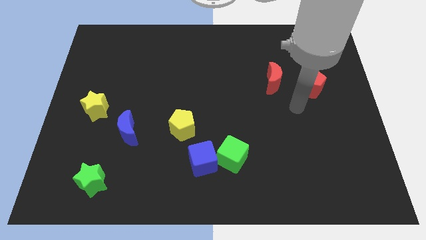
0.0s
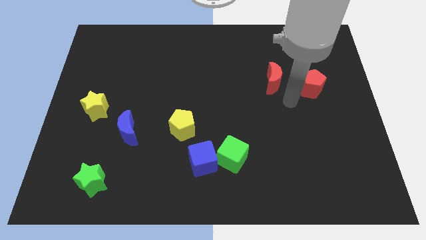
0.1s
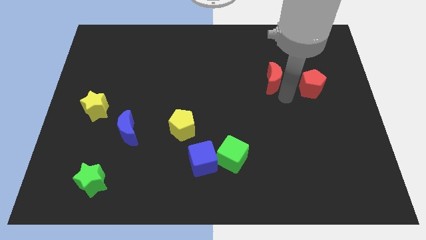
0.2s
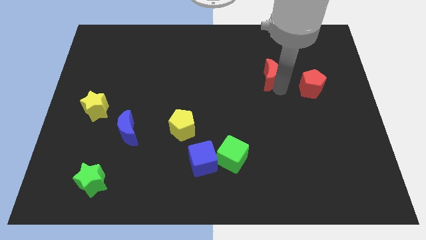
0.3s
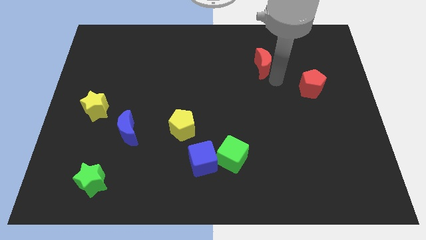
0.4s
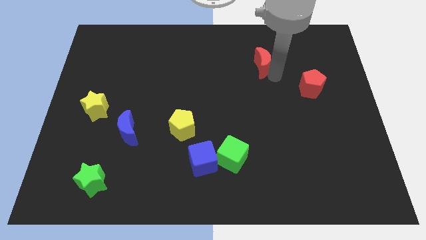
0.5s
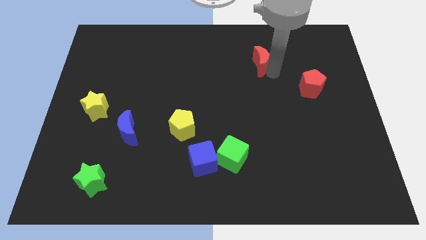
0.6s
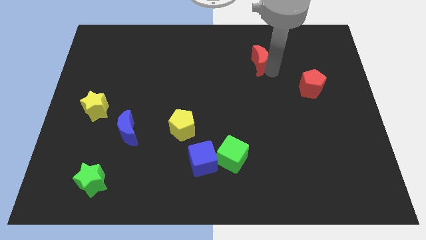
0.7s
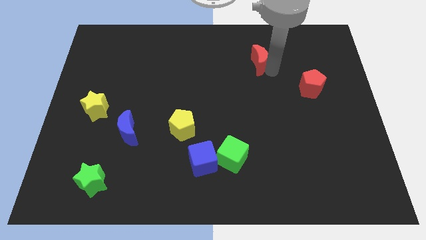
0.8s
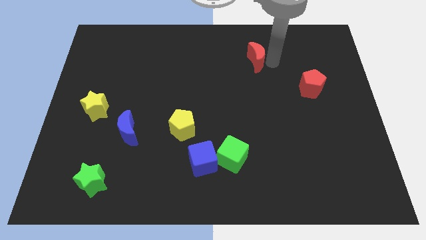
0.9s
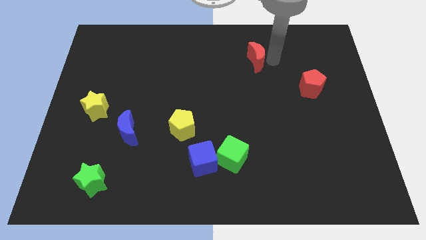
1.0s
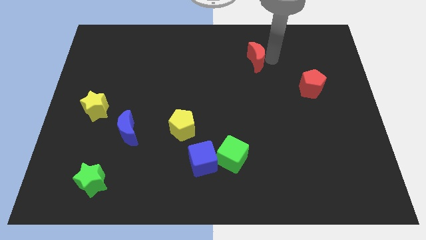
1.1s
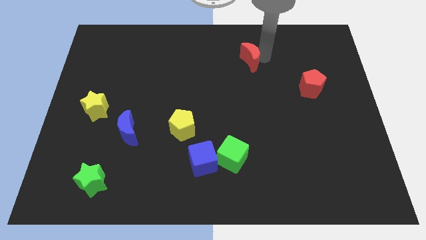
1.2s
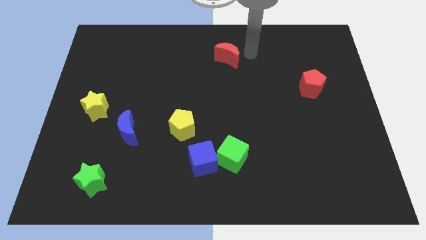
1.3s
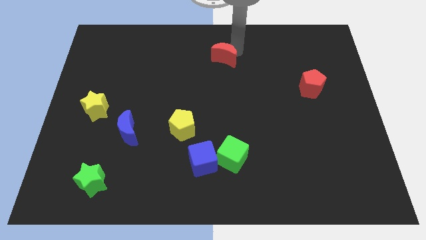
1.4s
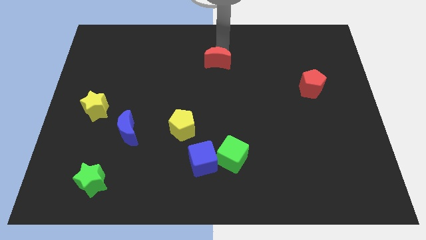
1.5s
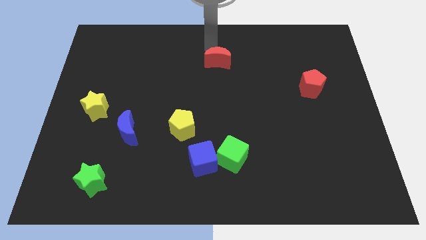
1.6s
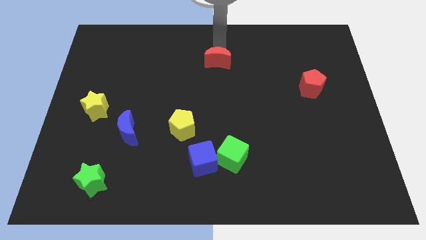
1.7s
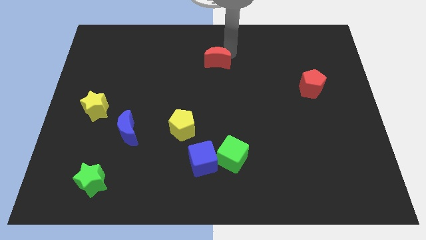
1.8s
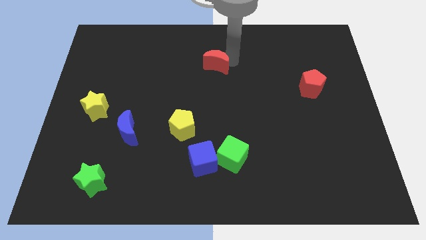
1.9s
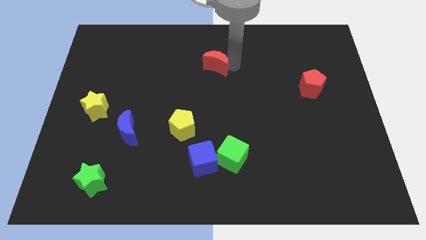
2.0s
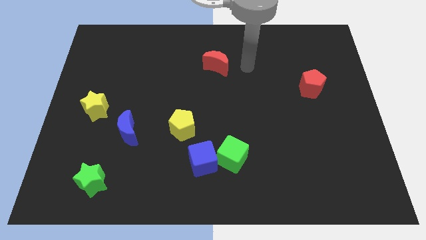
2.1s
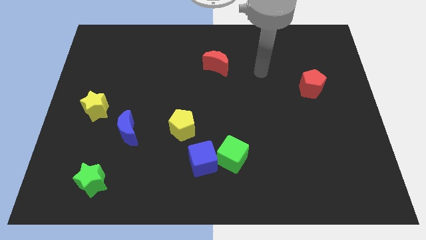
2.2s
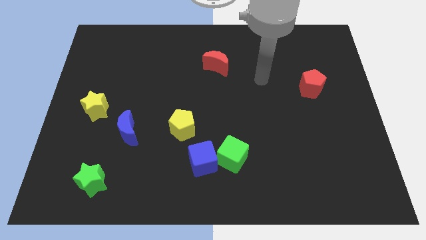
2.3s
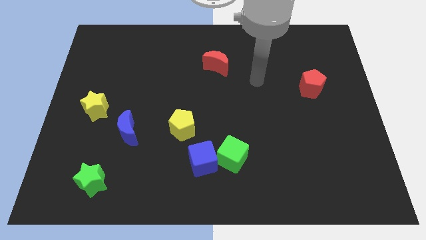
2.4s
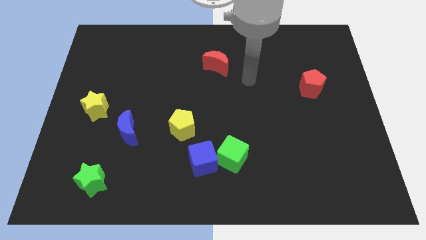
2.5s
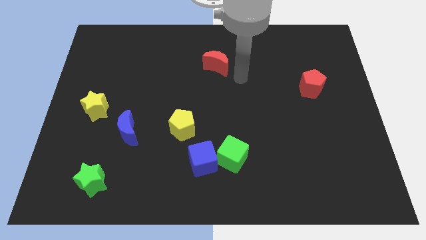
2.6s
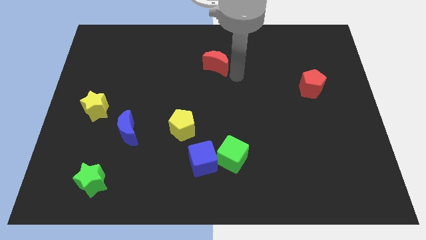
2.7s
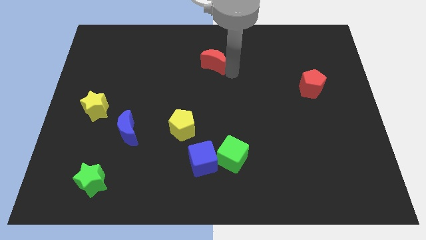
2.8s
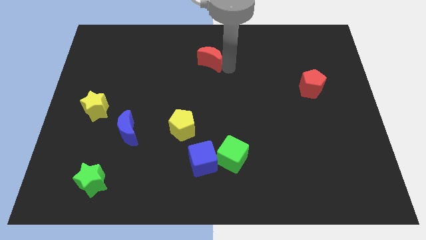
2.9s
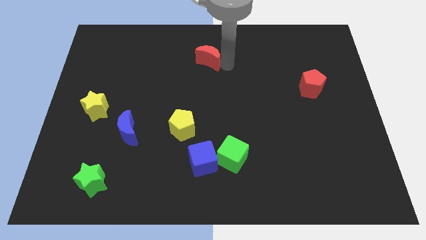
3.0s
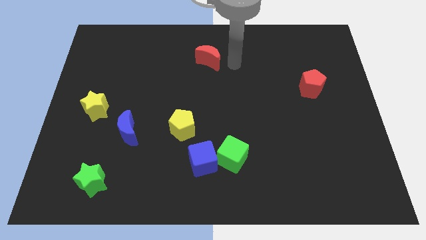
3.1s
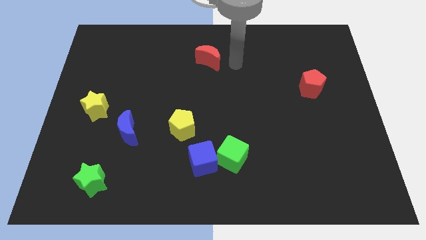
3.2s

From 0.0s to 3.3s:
push the red crescent to the top center of the board

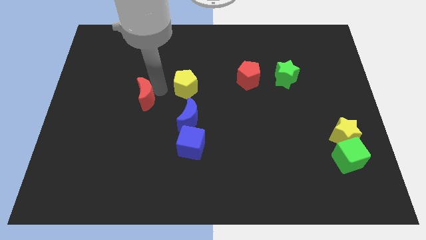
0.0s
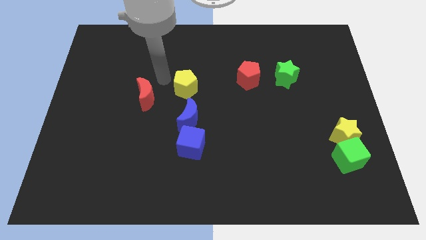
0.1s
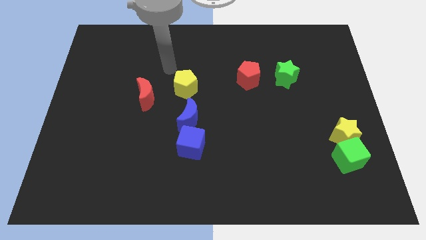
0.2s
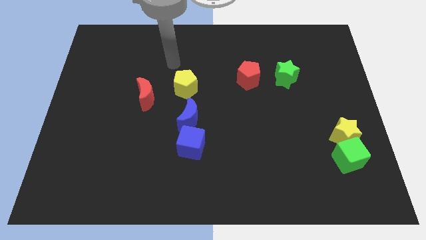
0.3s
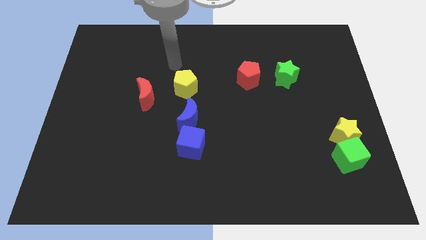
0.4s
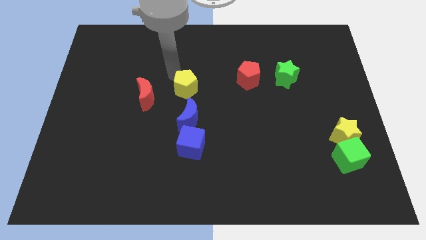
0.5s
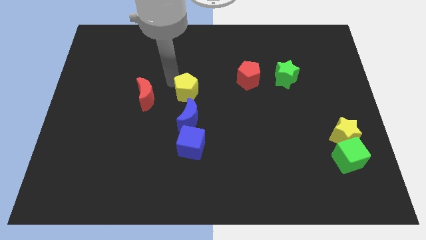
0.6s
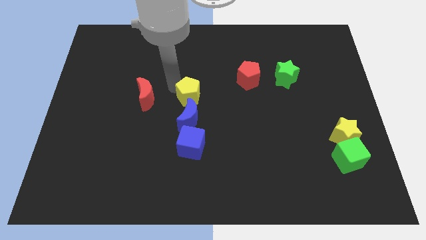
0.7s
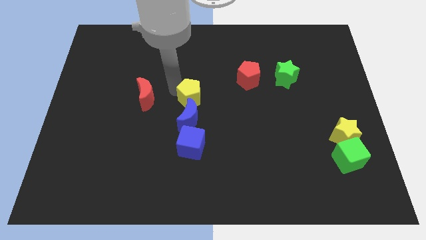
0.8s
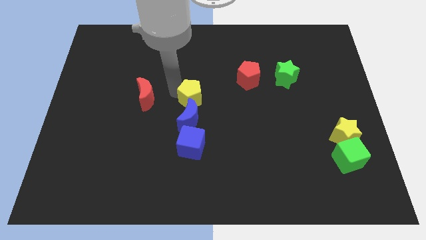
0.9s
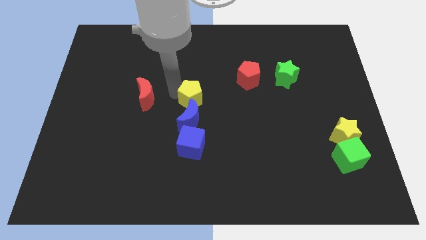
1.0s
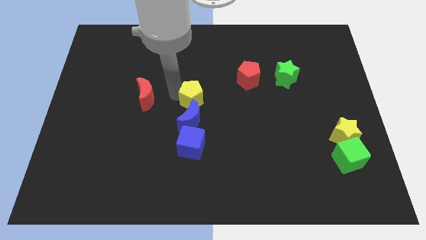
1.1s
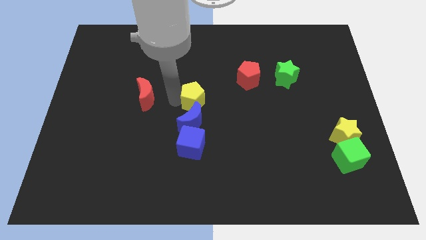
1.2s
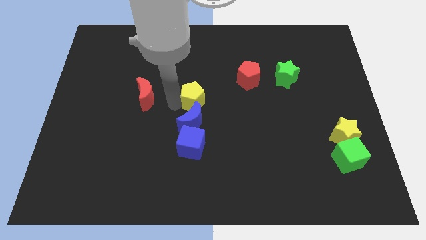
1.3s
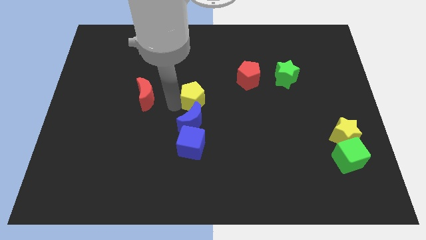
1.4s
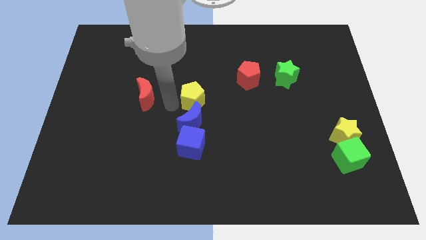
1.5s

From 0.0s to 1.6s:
push the yellow pentagon into the blue crescent

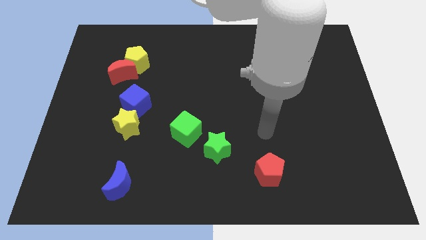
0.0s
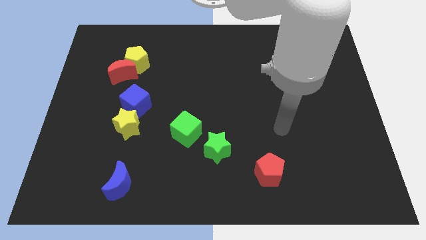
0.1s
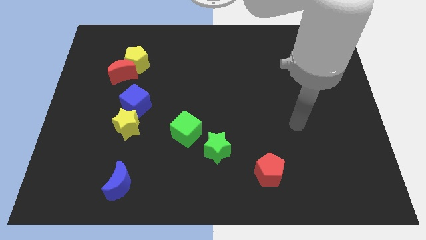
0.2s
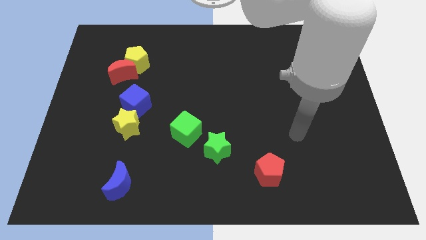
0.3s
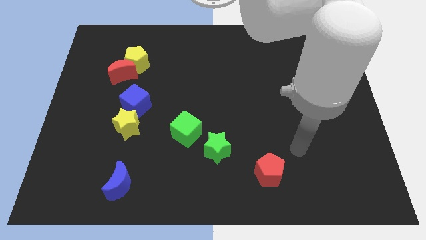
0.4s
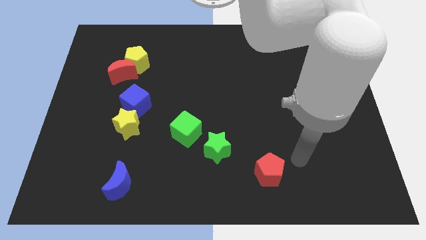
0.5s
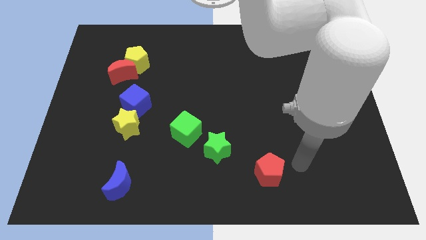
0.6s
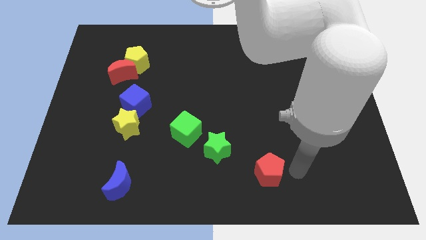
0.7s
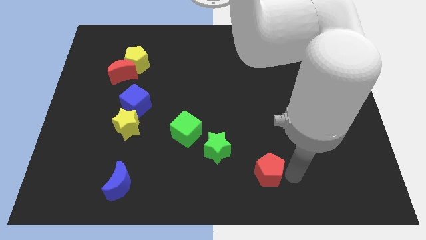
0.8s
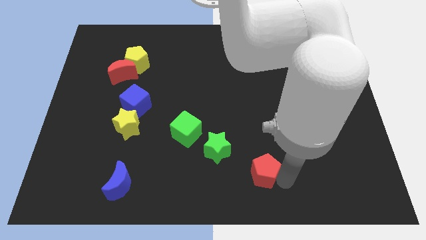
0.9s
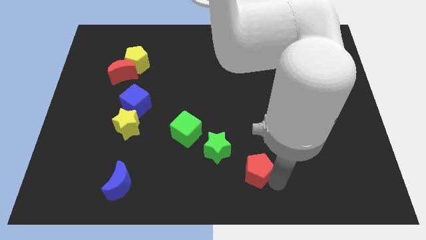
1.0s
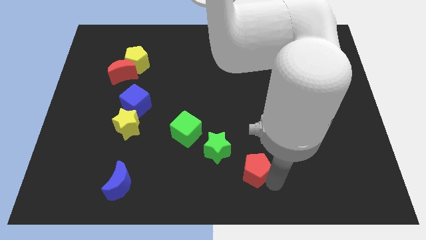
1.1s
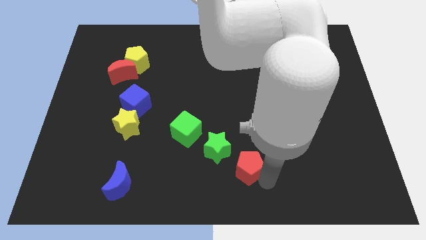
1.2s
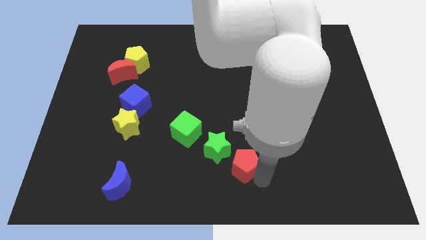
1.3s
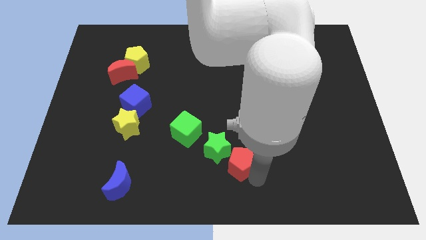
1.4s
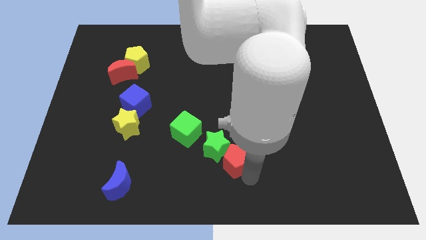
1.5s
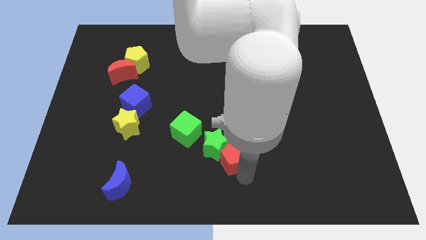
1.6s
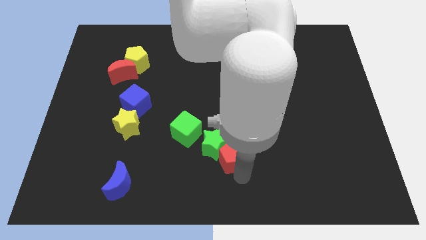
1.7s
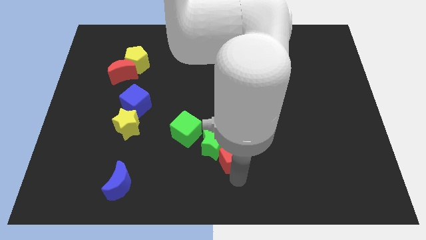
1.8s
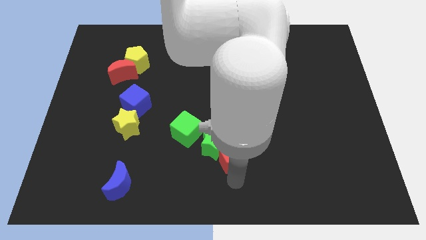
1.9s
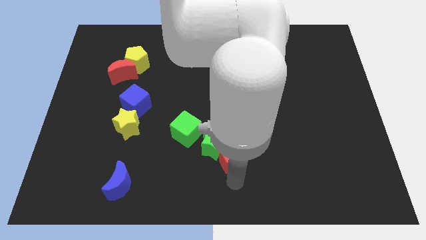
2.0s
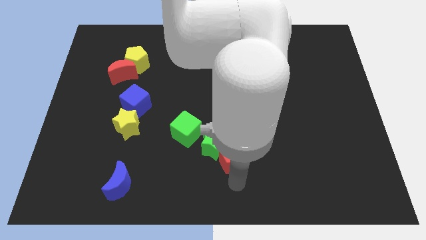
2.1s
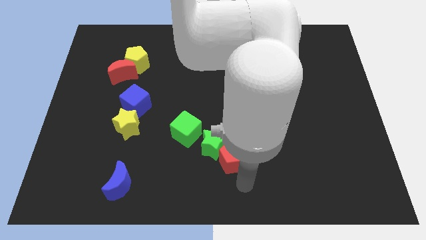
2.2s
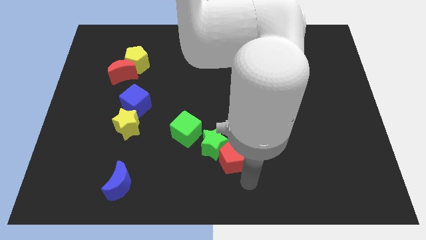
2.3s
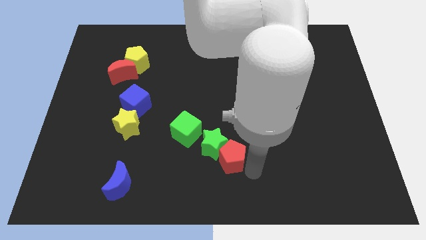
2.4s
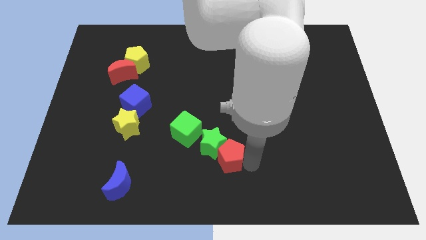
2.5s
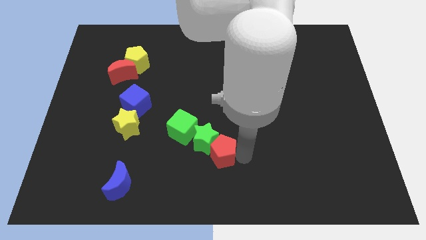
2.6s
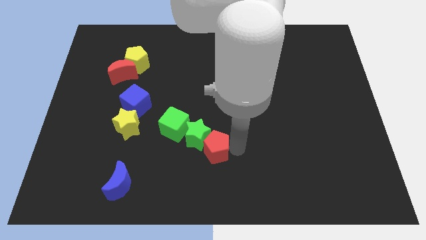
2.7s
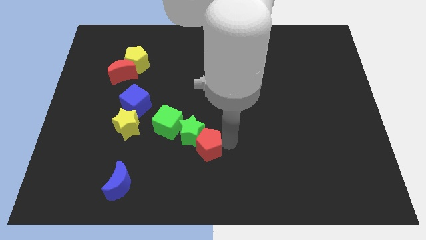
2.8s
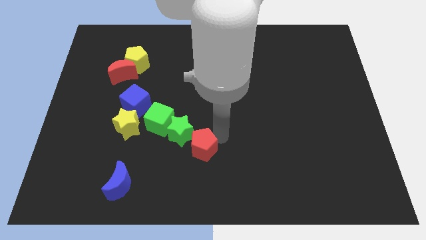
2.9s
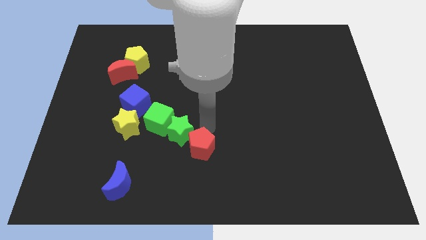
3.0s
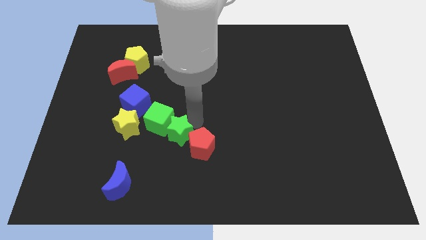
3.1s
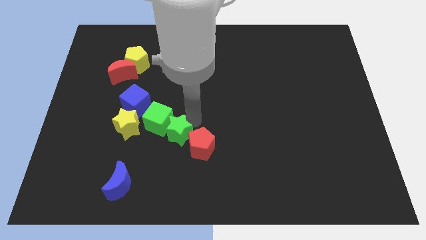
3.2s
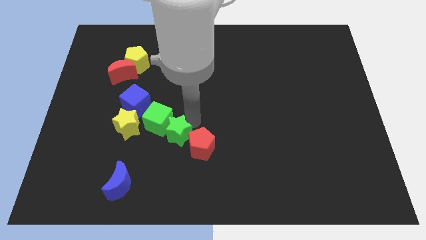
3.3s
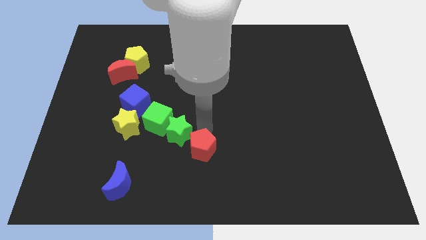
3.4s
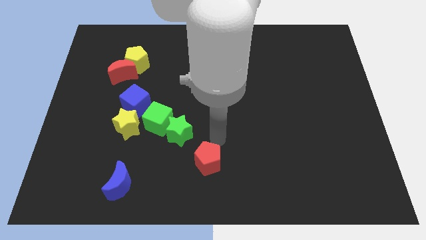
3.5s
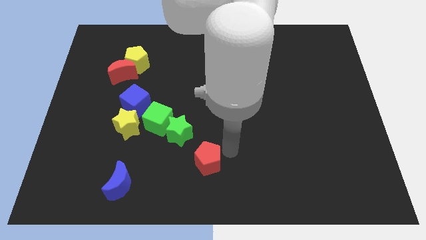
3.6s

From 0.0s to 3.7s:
push the red pentagon and the green star into the green cube

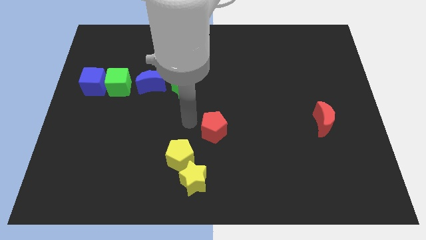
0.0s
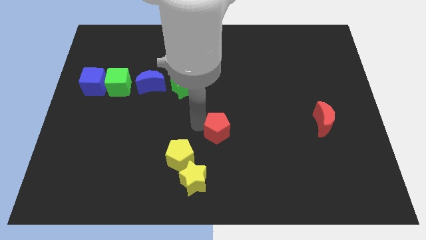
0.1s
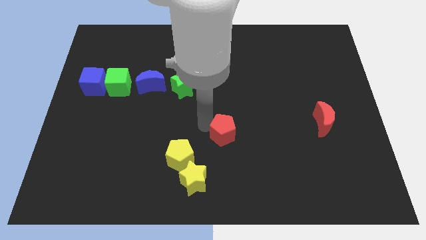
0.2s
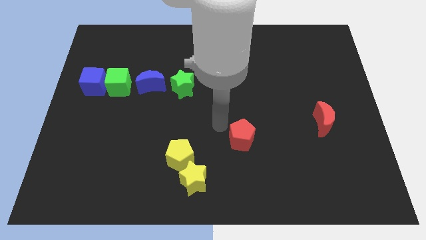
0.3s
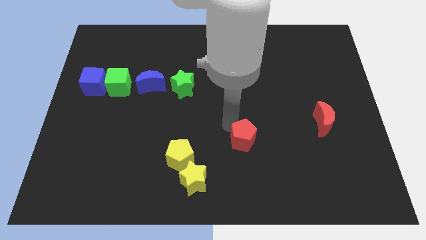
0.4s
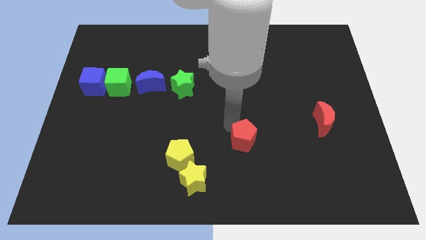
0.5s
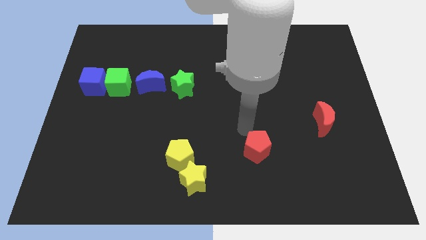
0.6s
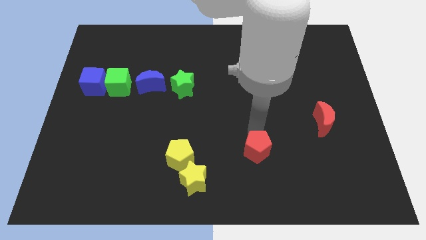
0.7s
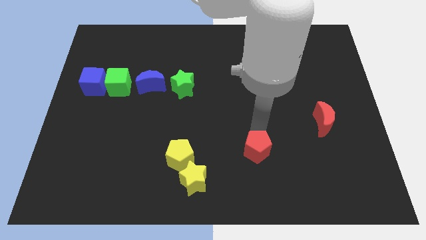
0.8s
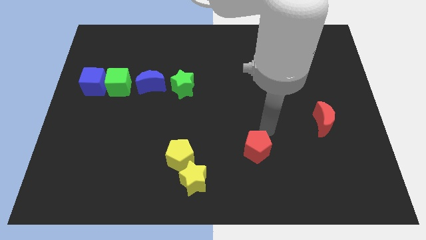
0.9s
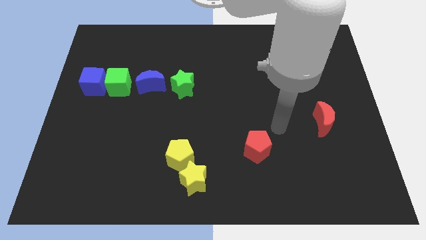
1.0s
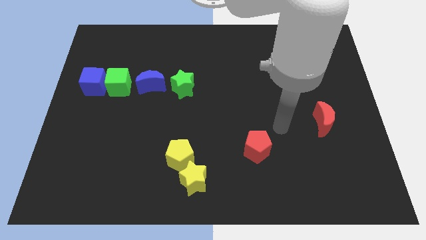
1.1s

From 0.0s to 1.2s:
move the red pentagon to the bottom of the board
